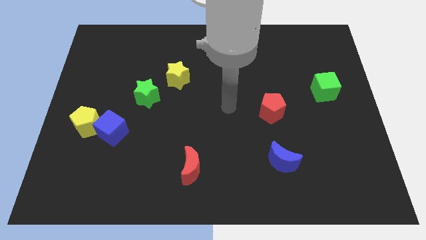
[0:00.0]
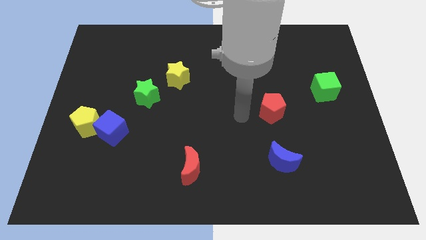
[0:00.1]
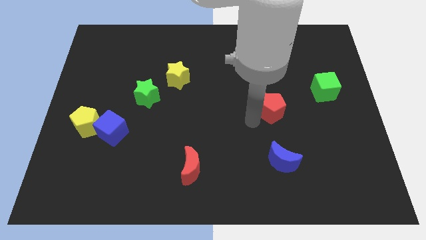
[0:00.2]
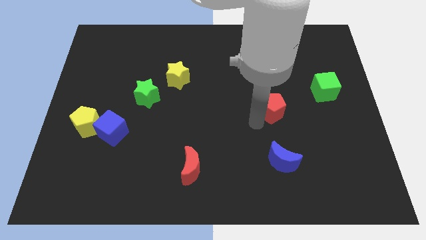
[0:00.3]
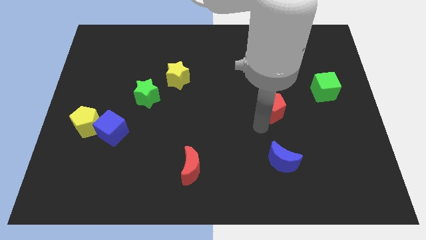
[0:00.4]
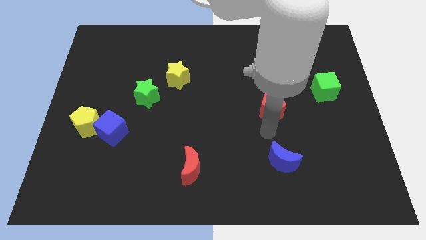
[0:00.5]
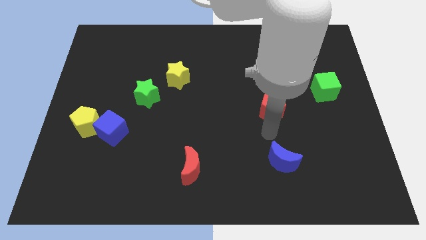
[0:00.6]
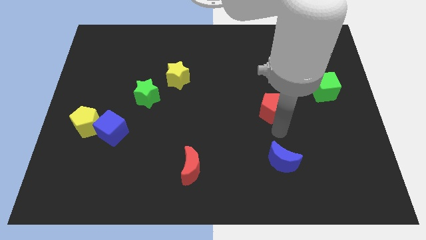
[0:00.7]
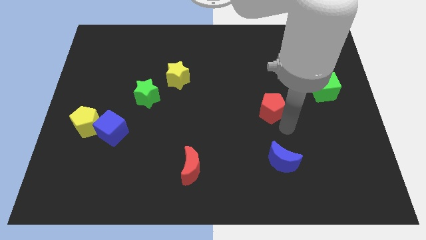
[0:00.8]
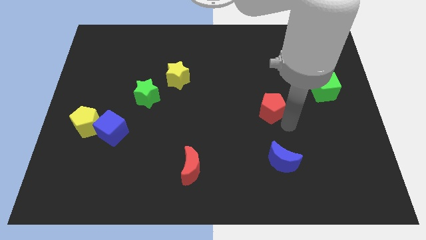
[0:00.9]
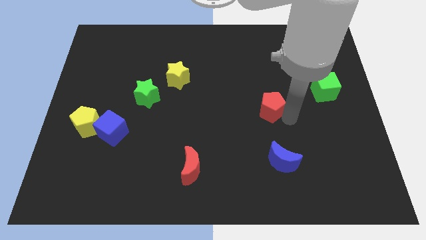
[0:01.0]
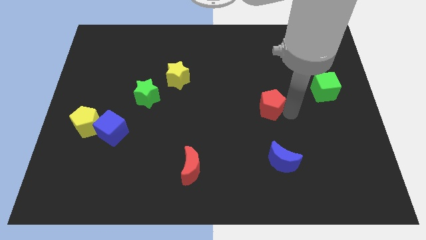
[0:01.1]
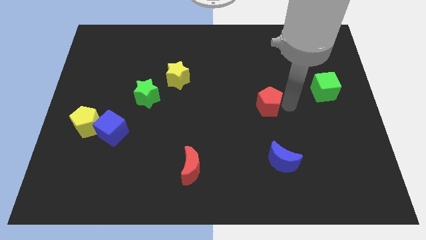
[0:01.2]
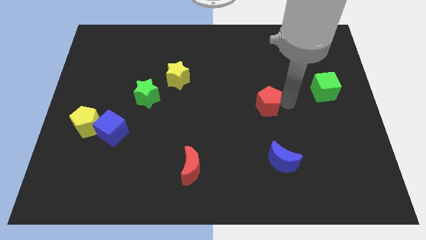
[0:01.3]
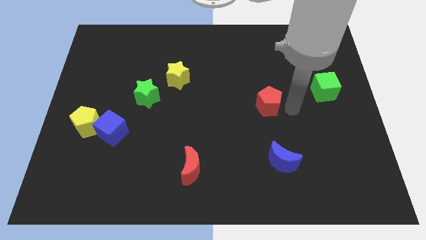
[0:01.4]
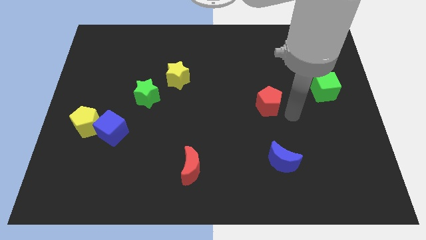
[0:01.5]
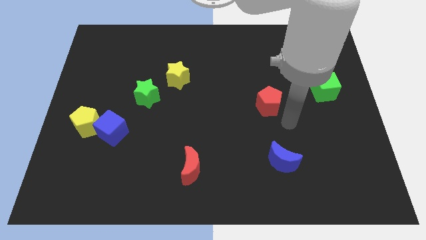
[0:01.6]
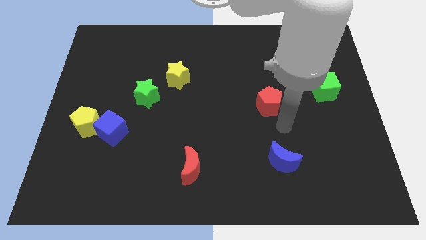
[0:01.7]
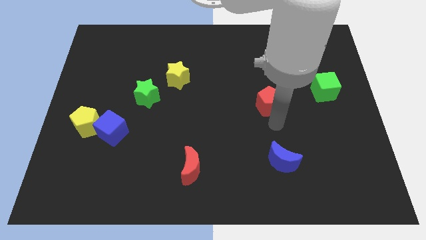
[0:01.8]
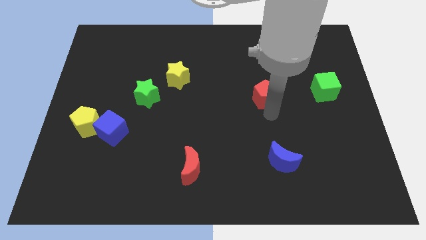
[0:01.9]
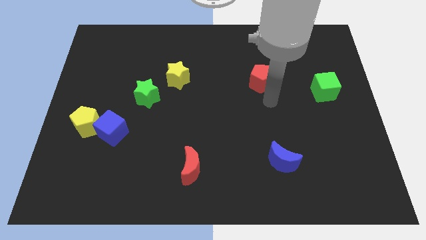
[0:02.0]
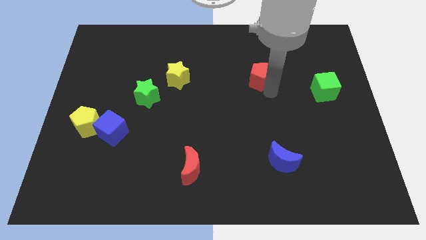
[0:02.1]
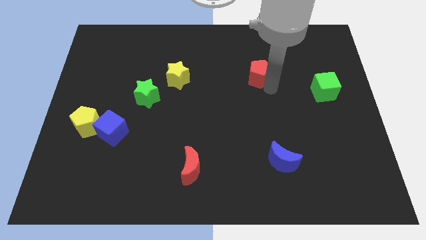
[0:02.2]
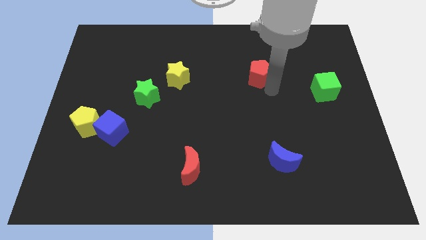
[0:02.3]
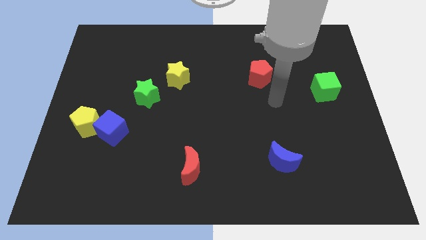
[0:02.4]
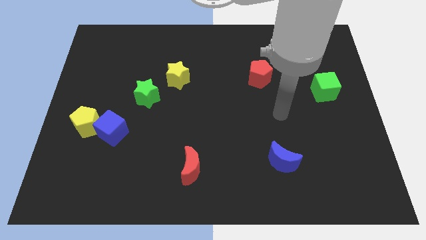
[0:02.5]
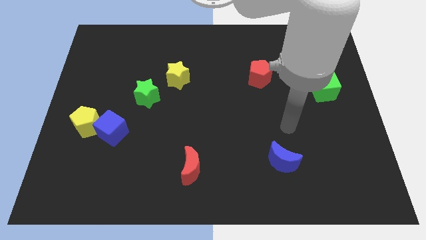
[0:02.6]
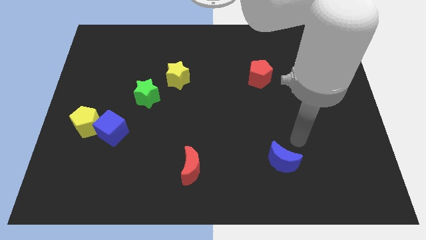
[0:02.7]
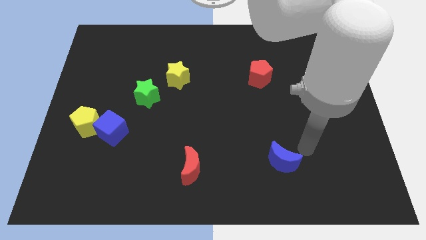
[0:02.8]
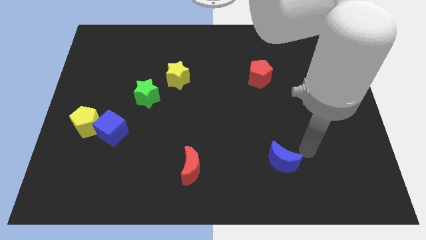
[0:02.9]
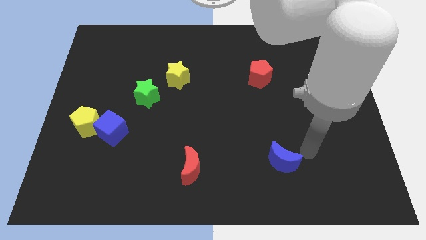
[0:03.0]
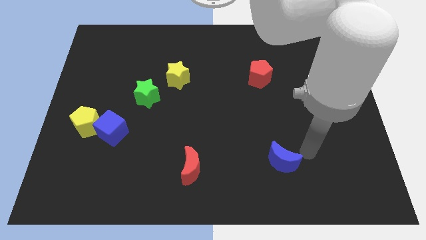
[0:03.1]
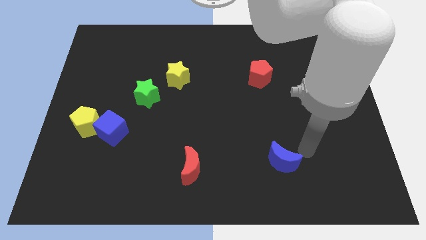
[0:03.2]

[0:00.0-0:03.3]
place the red pentagon in between yellow star and green cube

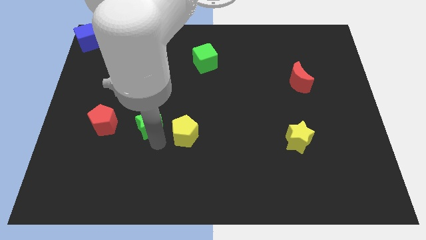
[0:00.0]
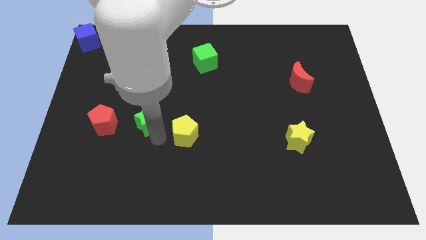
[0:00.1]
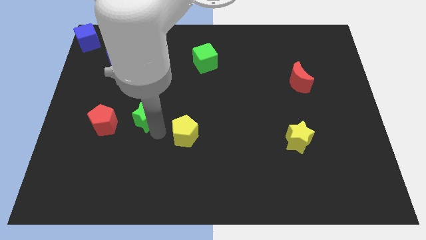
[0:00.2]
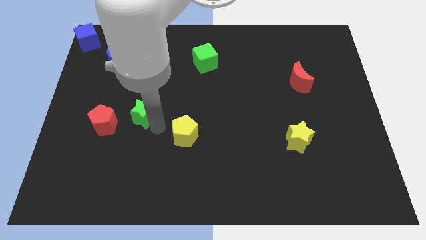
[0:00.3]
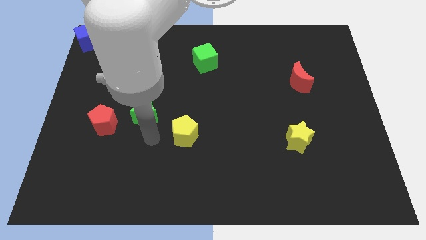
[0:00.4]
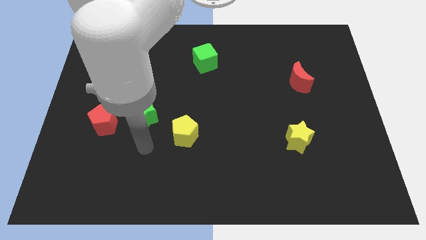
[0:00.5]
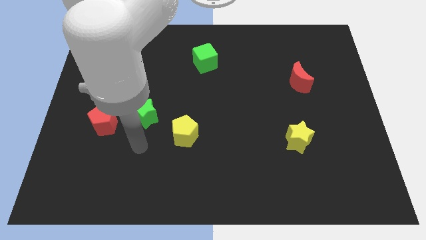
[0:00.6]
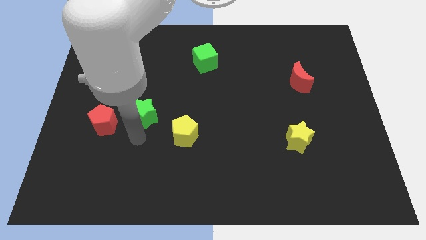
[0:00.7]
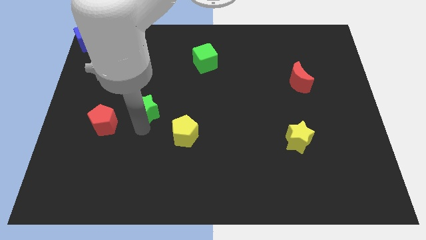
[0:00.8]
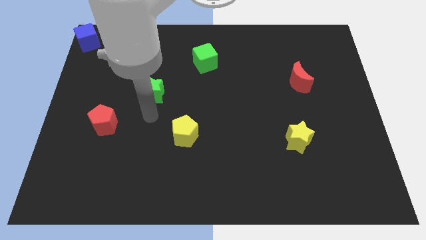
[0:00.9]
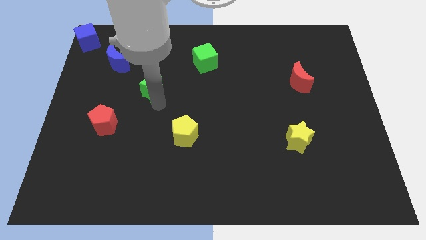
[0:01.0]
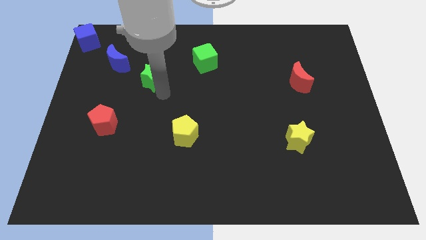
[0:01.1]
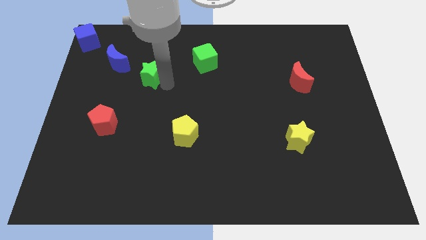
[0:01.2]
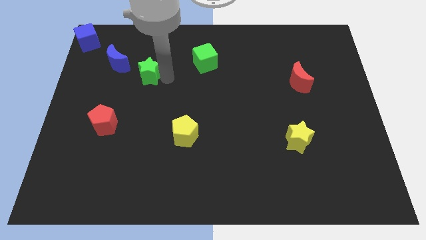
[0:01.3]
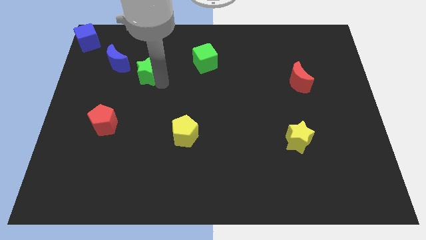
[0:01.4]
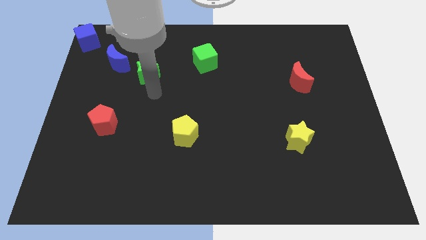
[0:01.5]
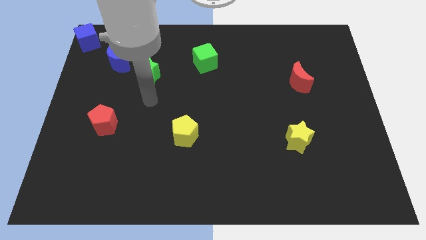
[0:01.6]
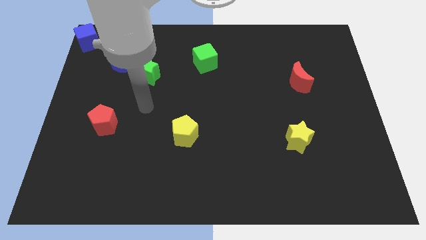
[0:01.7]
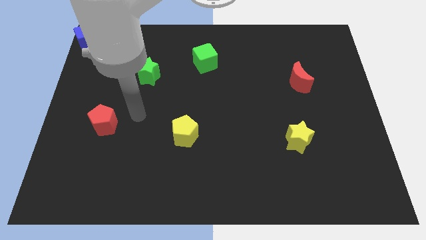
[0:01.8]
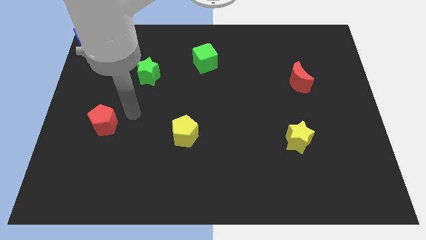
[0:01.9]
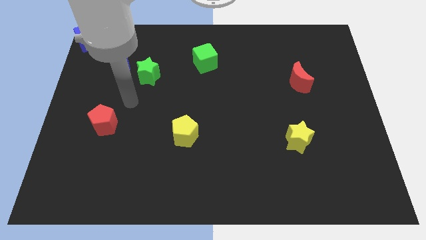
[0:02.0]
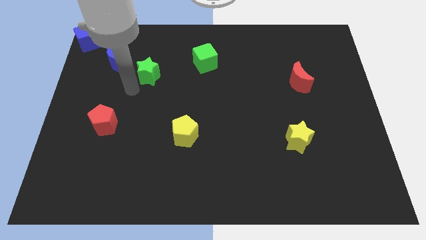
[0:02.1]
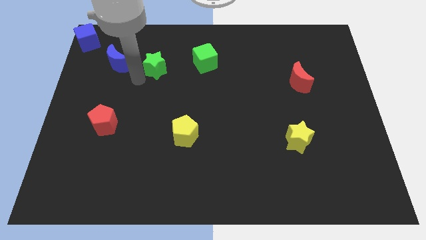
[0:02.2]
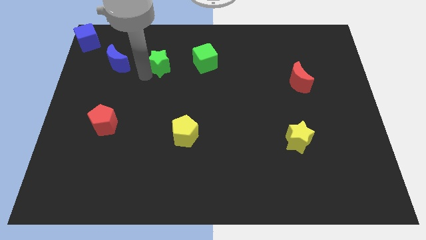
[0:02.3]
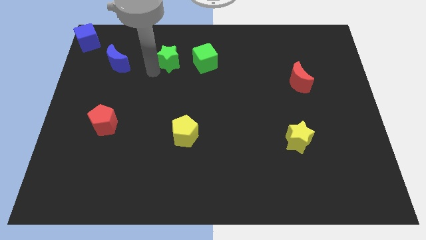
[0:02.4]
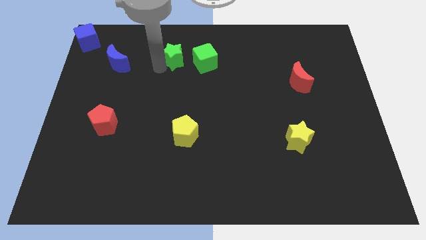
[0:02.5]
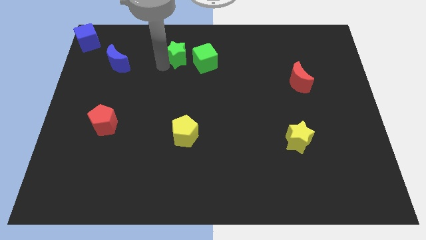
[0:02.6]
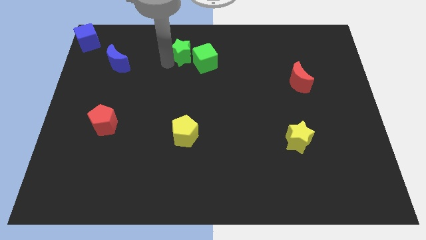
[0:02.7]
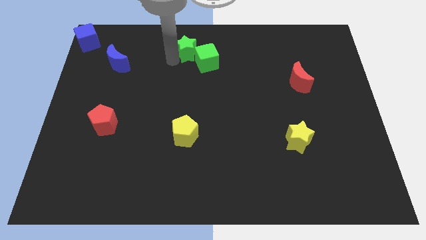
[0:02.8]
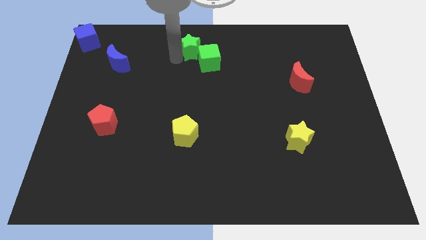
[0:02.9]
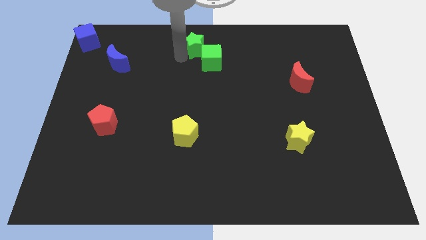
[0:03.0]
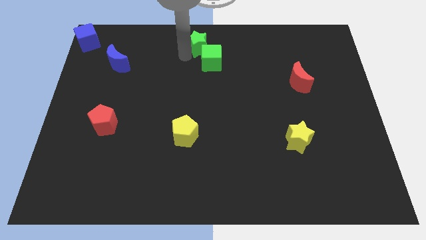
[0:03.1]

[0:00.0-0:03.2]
move the green star diagonally top left to green cube

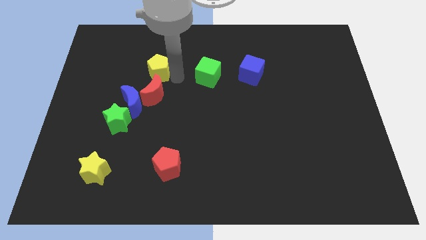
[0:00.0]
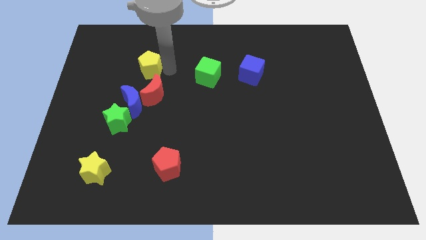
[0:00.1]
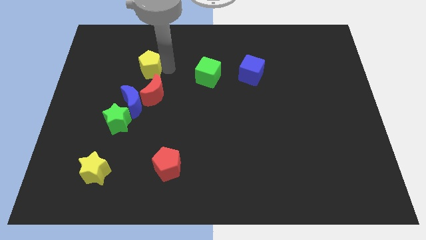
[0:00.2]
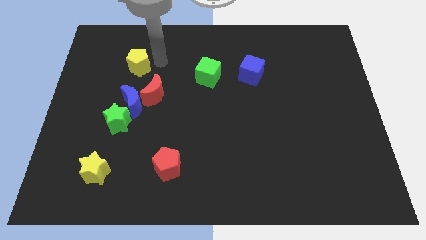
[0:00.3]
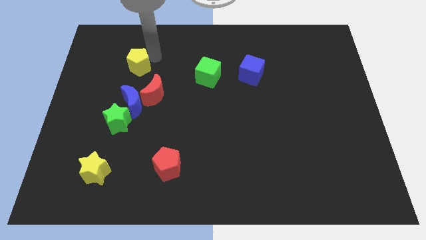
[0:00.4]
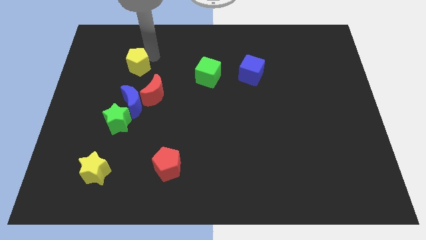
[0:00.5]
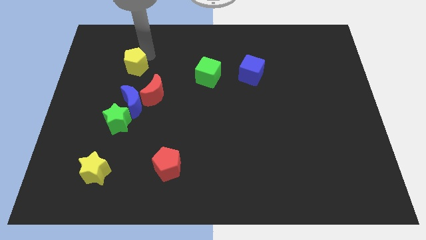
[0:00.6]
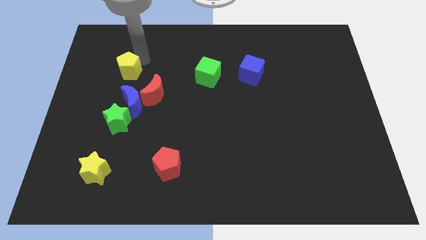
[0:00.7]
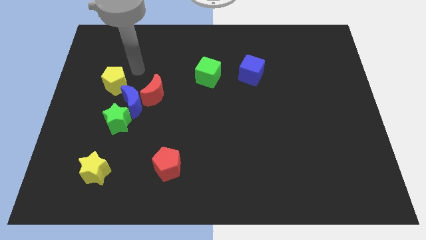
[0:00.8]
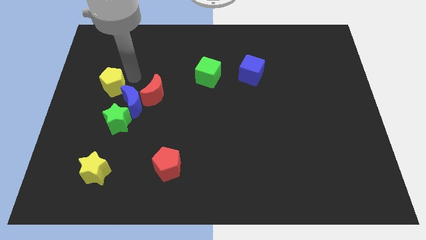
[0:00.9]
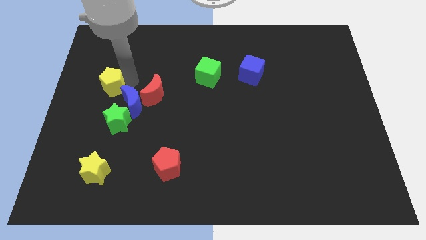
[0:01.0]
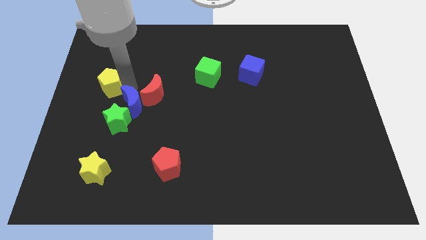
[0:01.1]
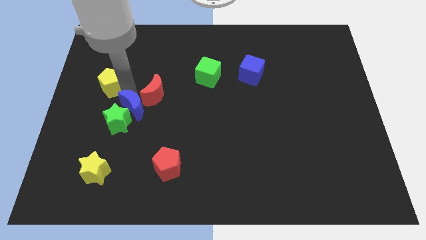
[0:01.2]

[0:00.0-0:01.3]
move the yellow pentagon diagonally top left to the blue moon

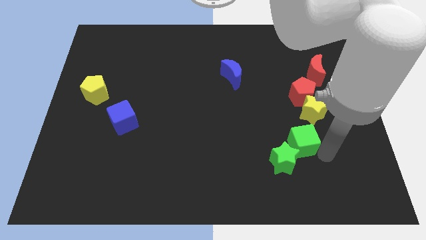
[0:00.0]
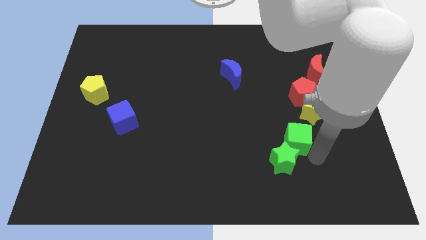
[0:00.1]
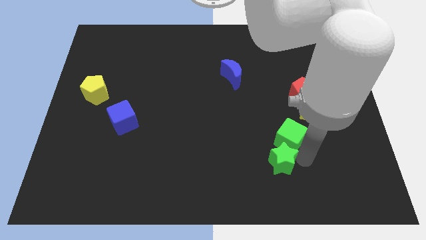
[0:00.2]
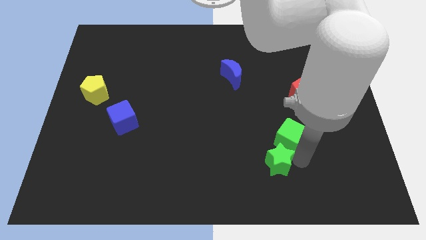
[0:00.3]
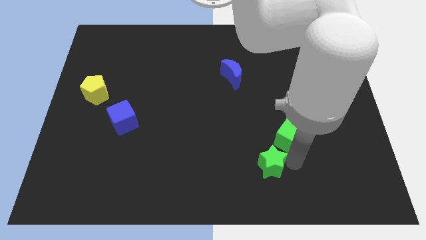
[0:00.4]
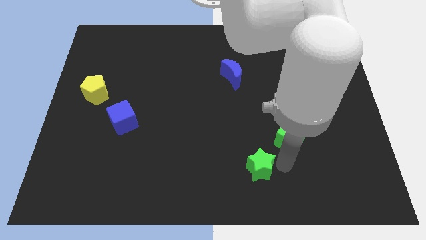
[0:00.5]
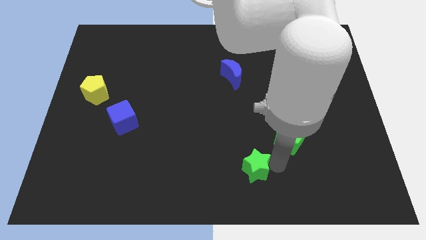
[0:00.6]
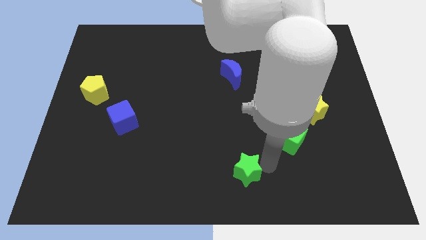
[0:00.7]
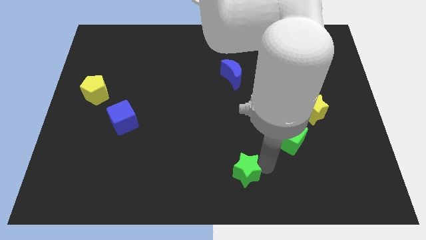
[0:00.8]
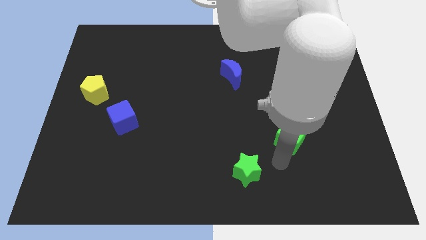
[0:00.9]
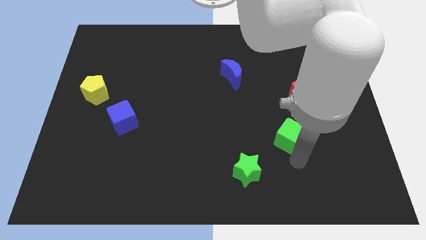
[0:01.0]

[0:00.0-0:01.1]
slide green star to the bottom of the blue crescent
